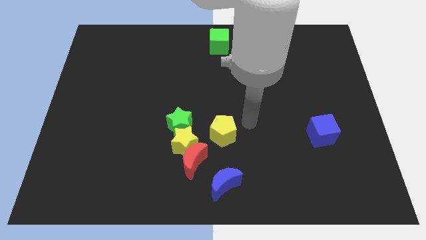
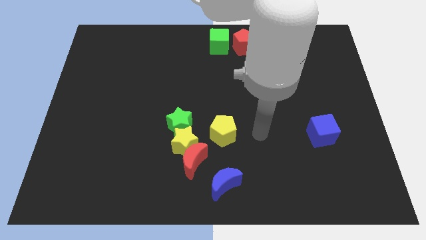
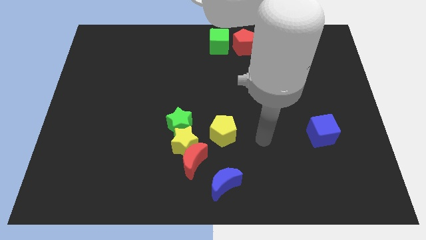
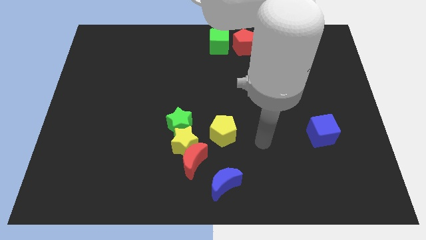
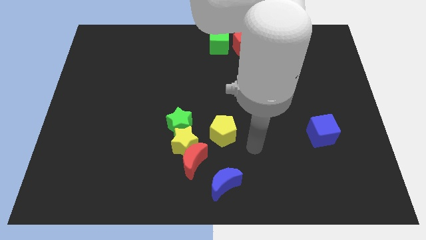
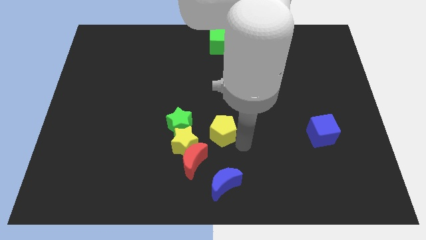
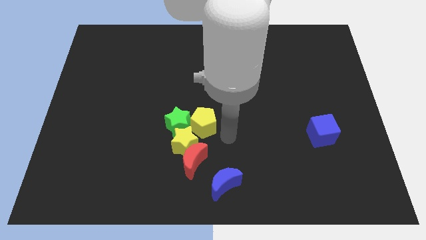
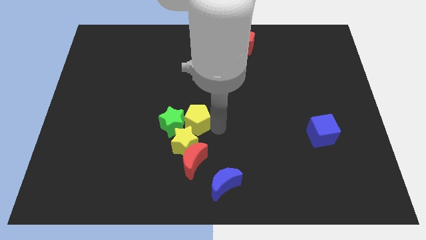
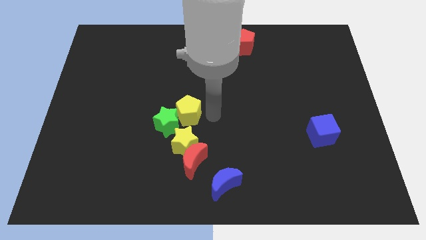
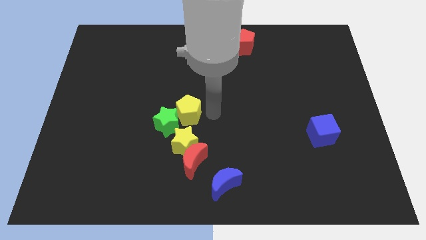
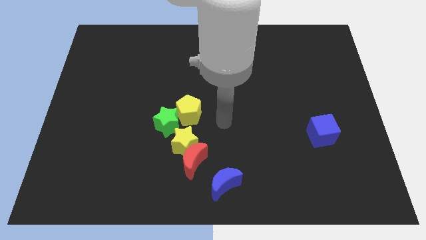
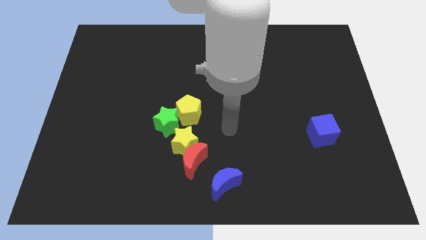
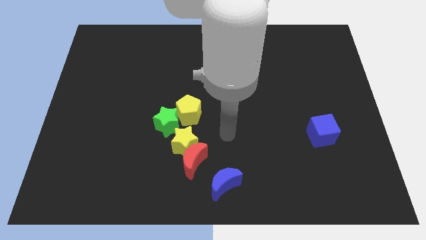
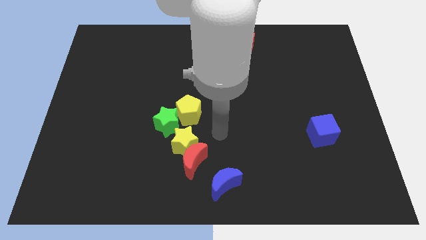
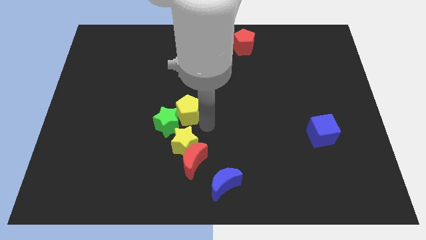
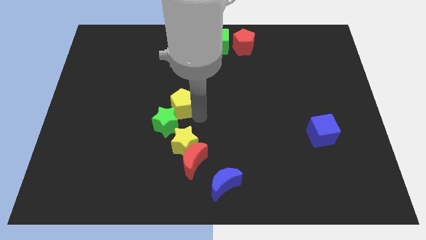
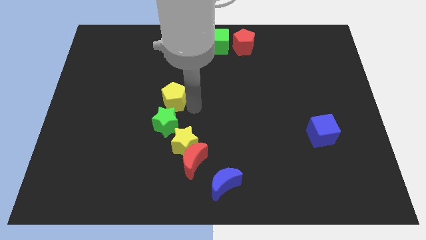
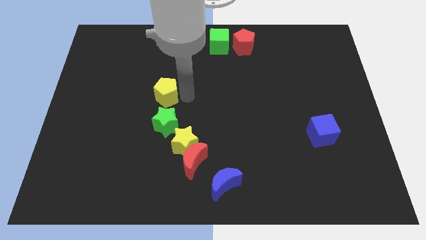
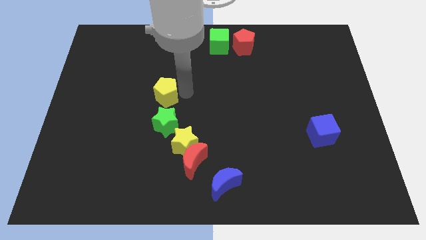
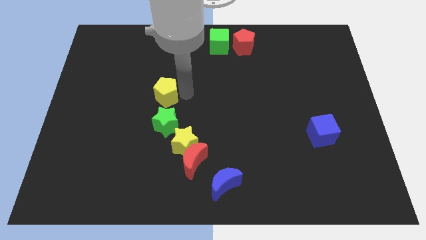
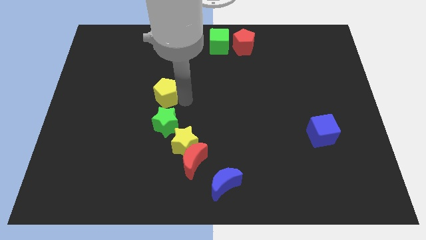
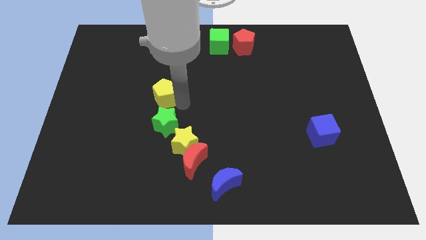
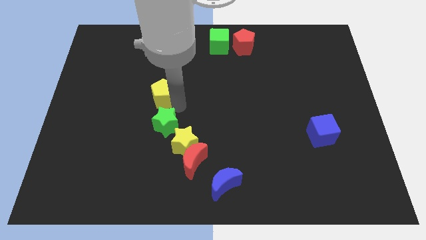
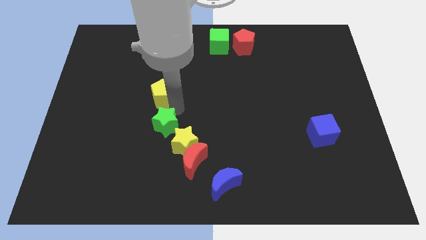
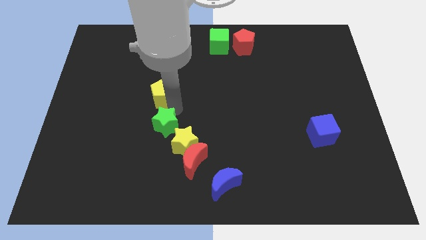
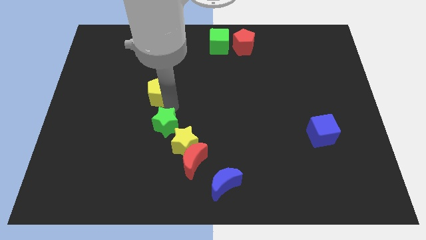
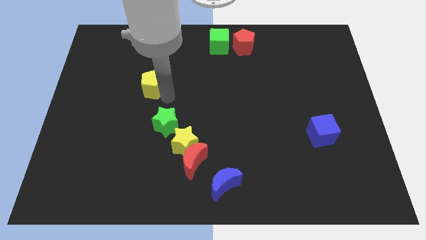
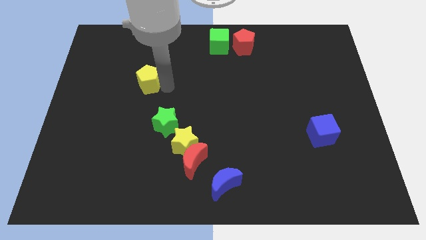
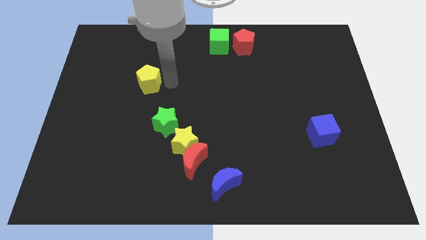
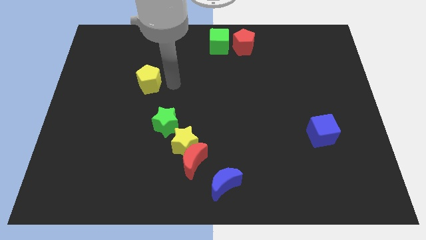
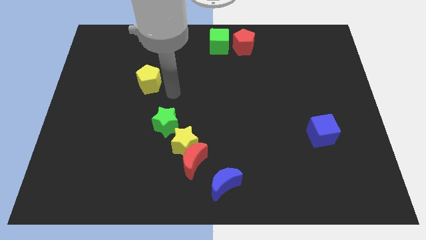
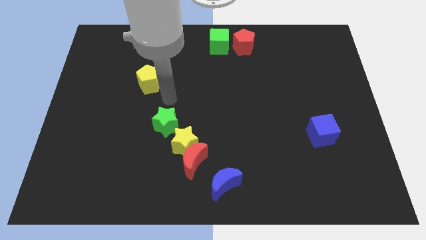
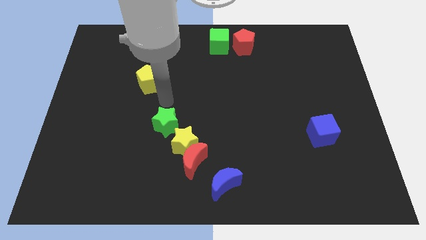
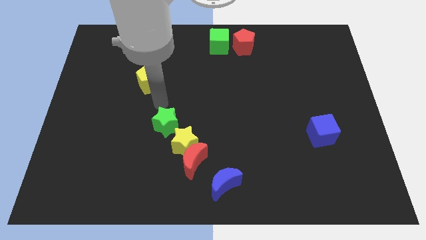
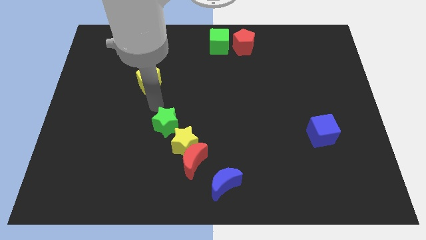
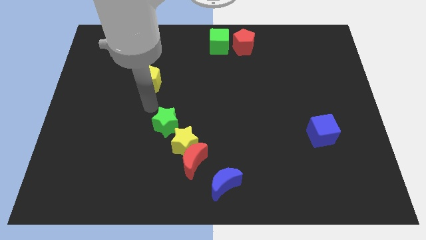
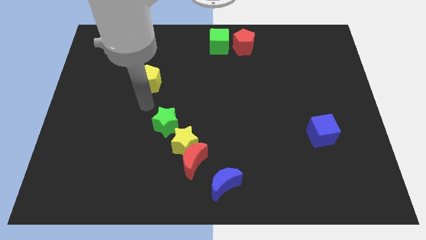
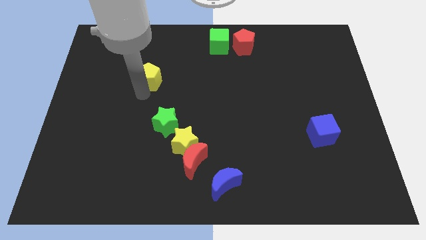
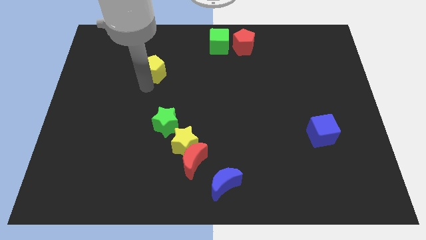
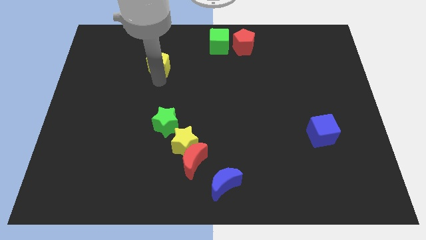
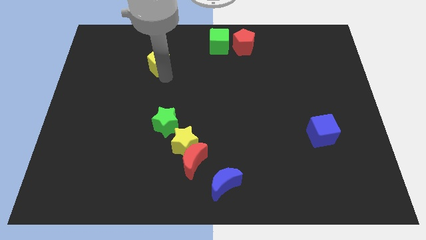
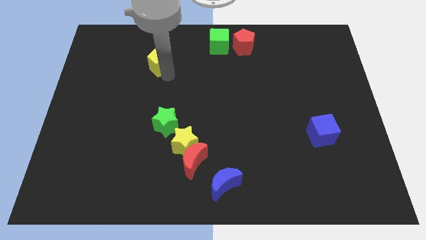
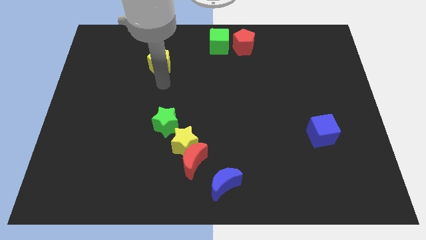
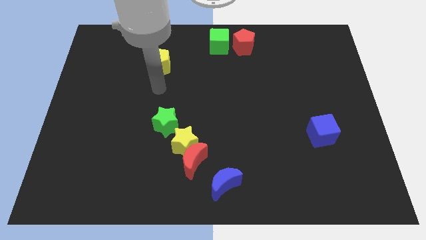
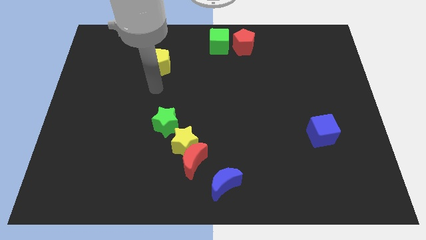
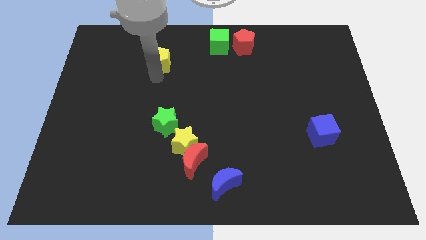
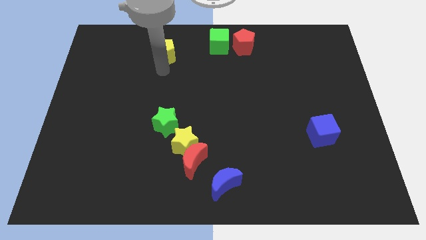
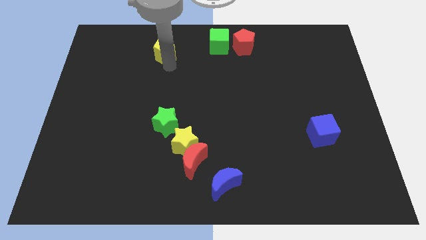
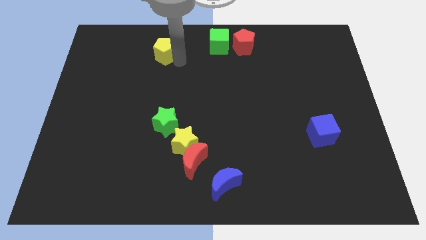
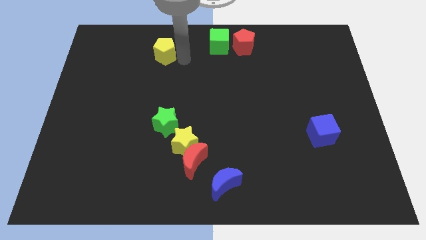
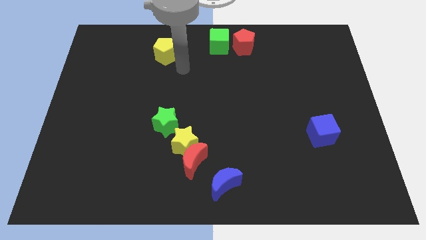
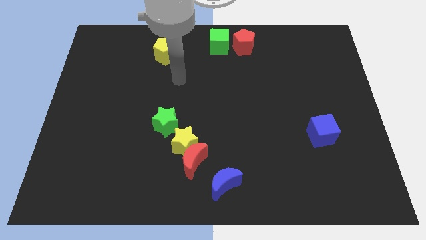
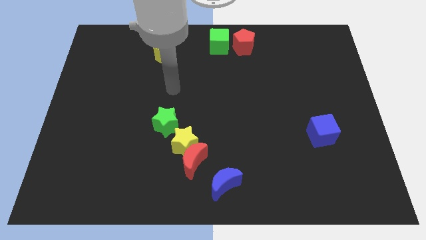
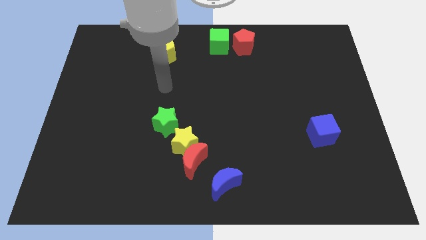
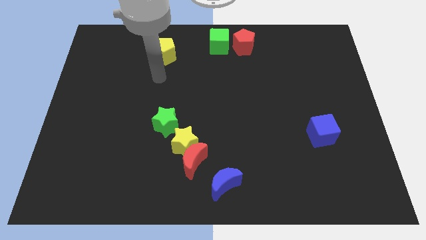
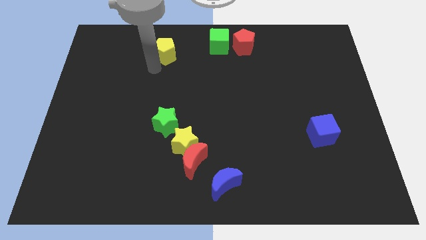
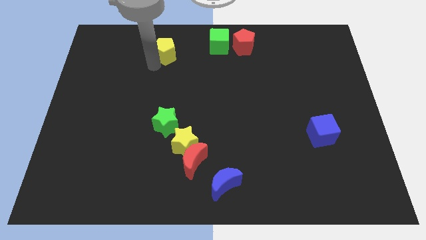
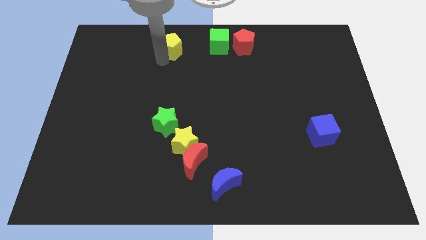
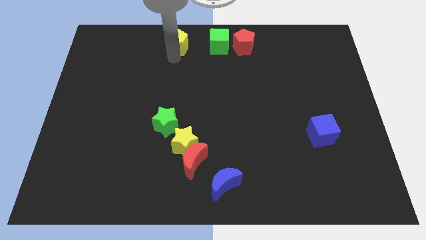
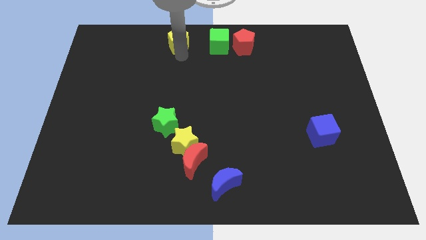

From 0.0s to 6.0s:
move yellow pentagon to the left of green cube

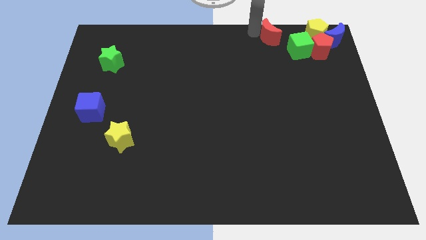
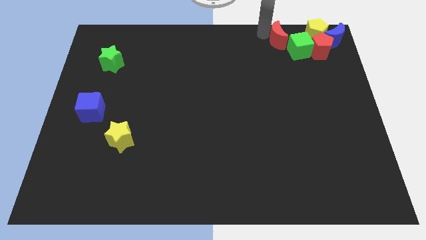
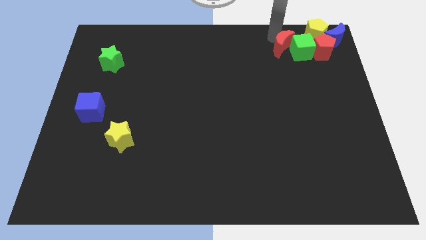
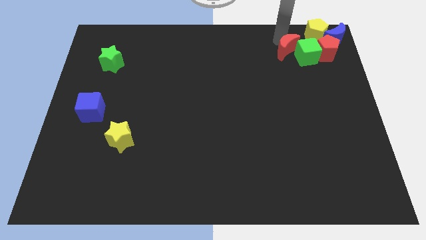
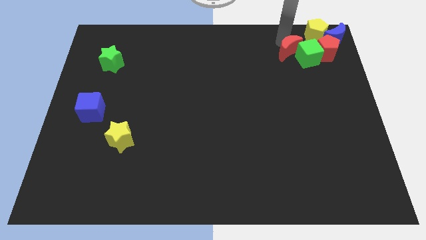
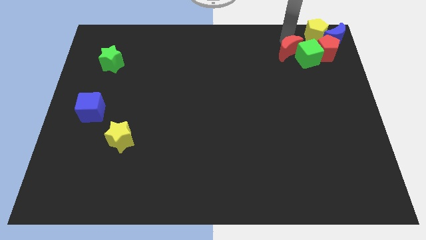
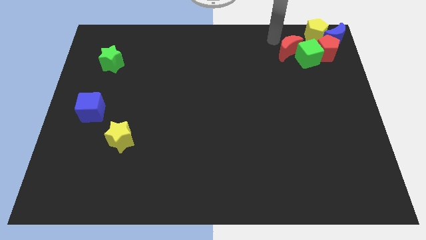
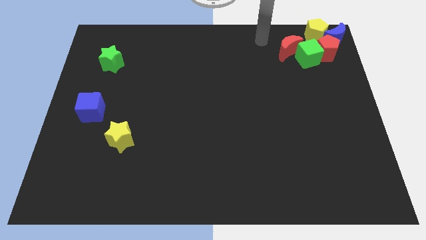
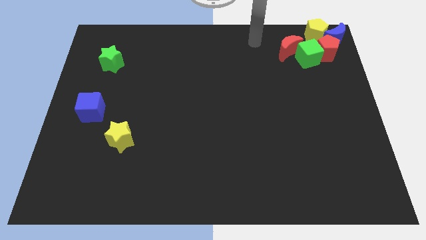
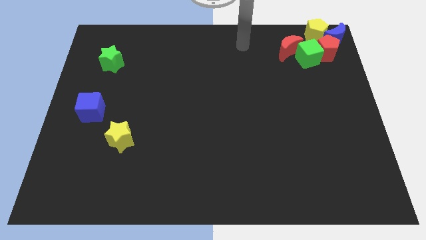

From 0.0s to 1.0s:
push the red moon into the green cube

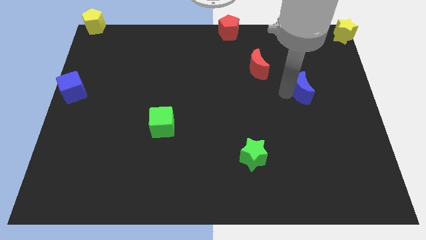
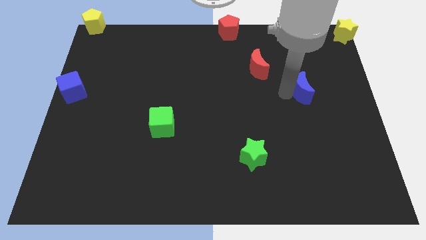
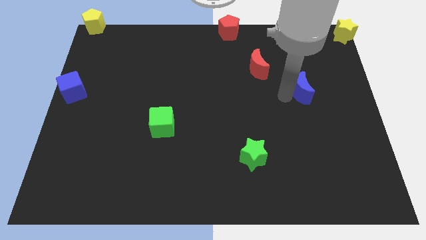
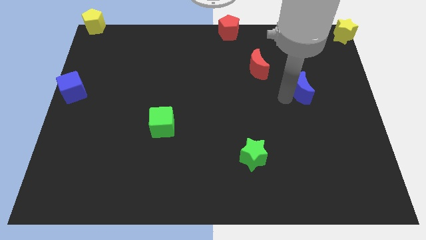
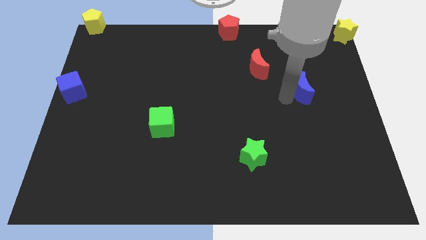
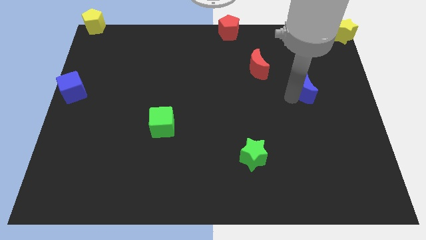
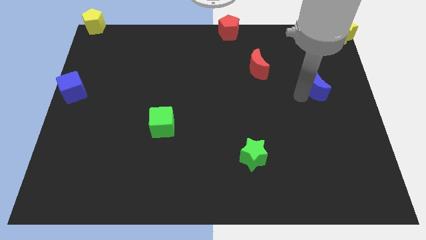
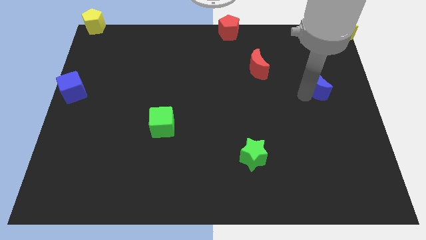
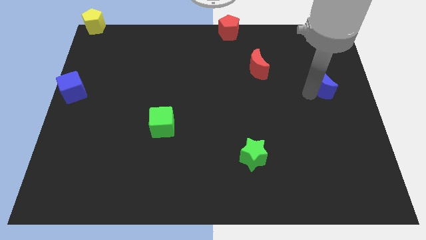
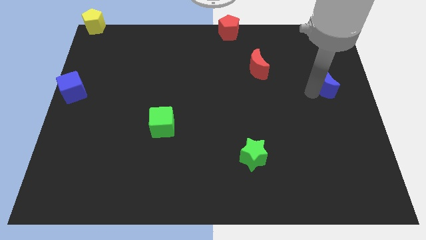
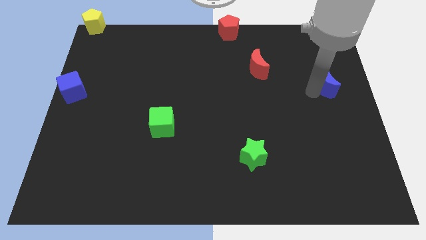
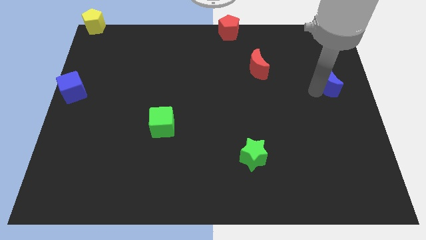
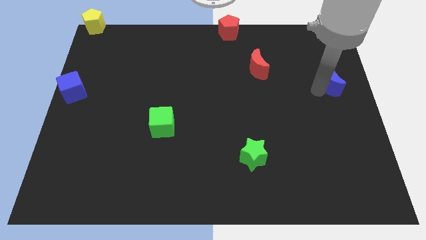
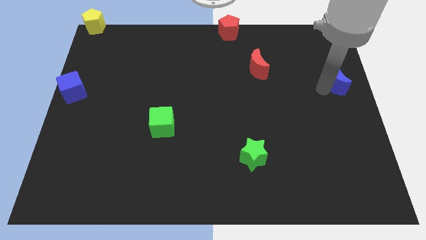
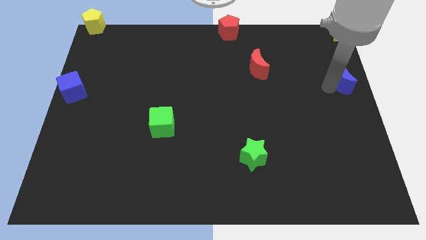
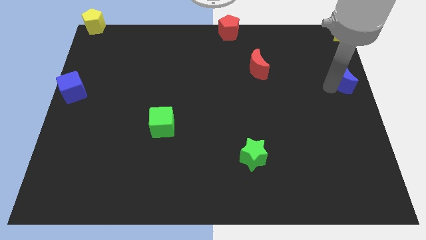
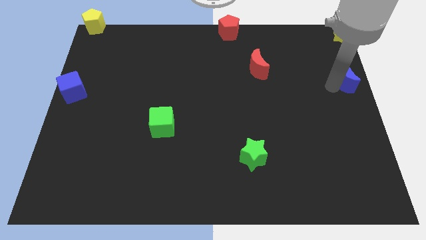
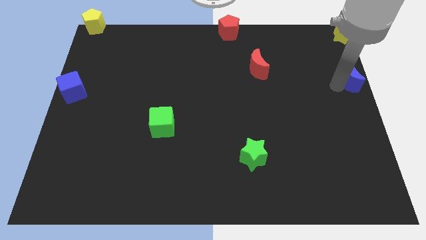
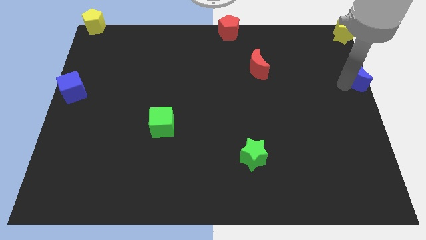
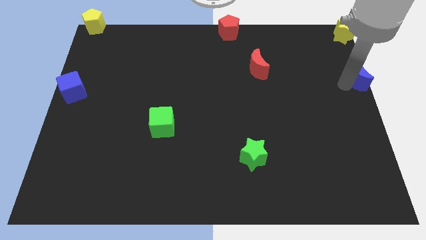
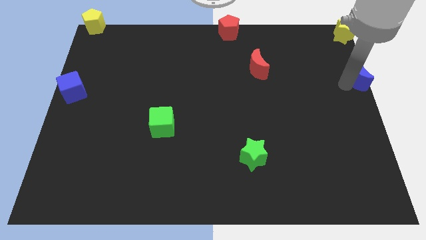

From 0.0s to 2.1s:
place blue crescent below yellow star
